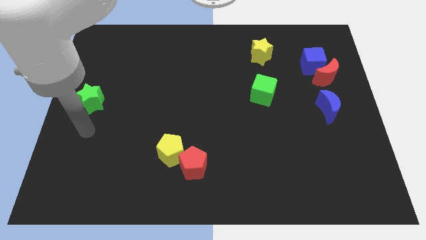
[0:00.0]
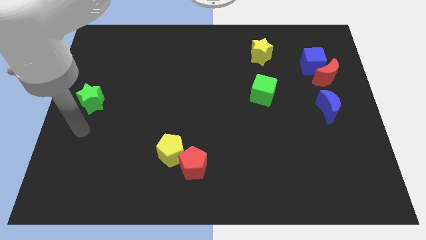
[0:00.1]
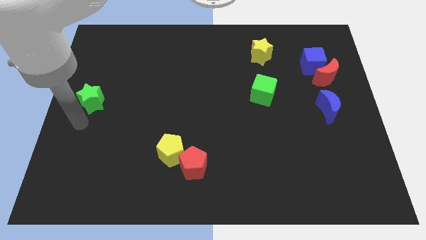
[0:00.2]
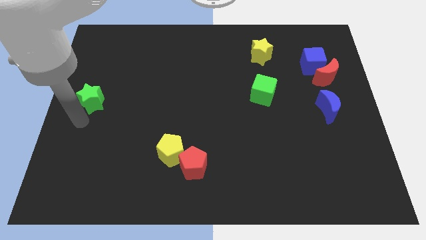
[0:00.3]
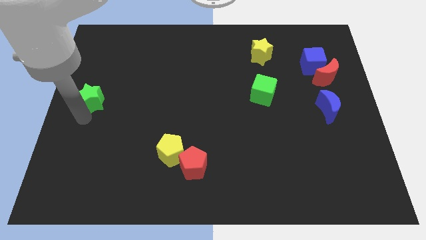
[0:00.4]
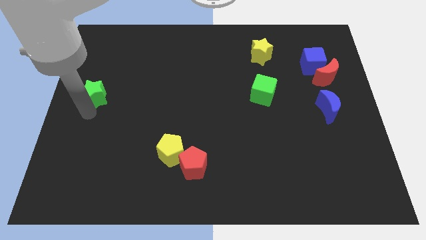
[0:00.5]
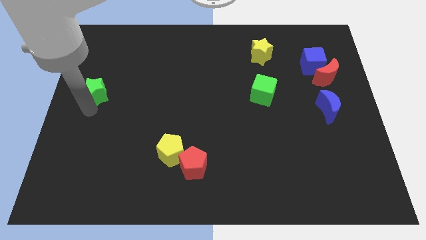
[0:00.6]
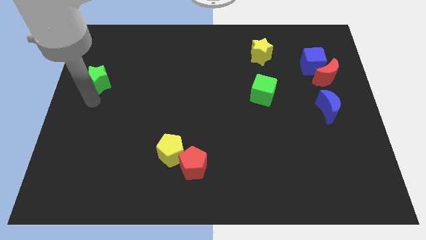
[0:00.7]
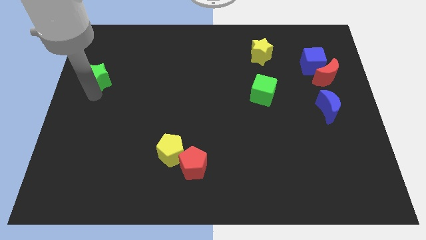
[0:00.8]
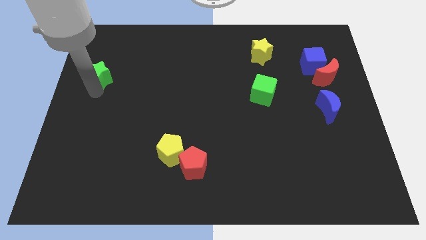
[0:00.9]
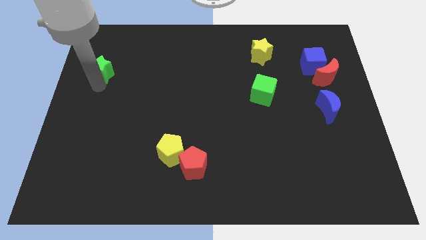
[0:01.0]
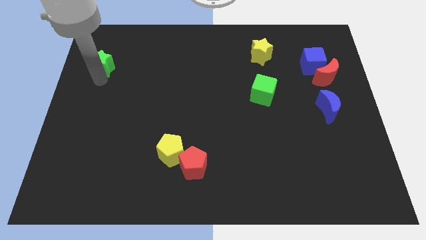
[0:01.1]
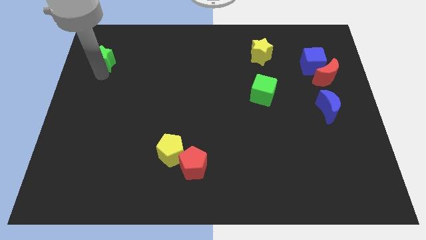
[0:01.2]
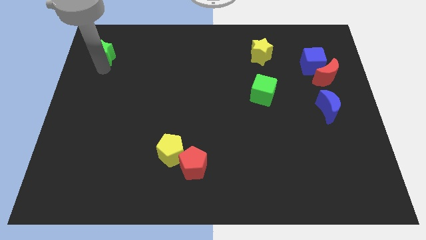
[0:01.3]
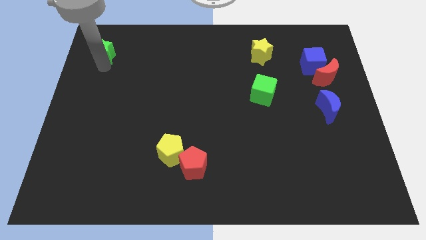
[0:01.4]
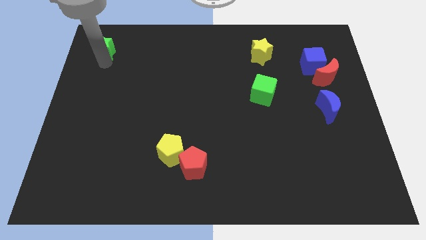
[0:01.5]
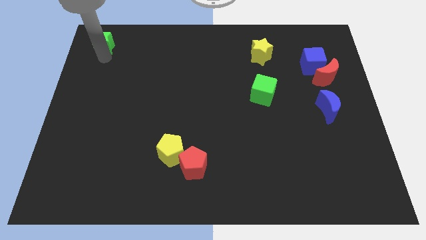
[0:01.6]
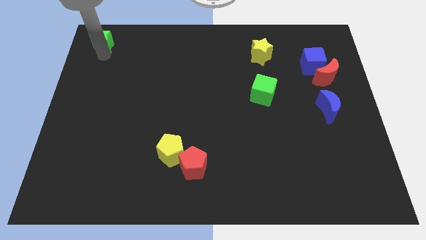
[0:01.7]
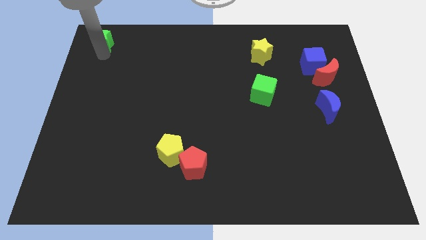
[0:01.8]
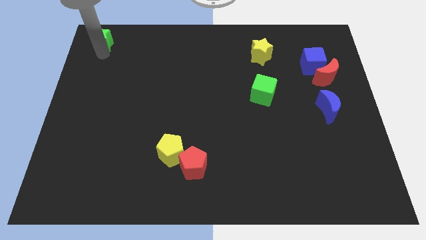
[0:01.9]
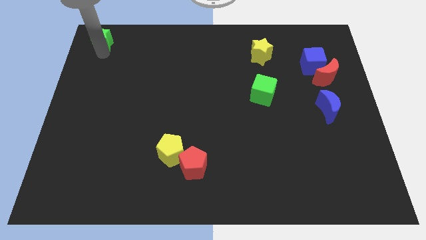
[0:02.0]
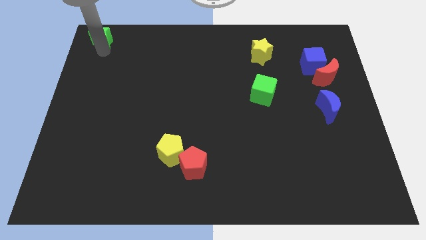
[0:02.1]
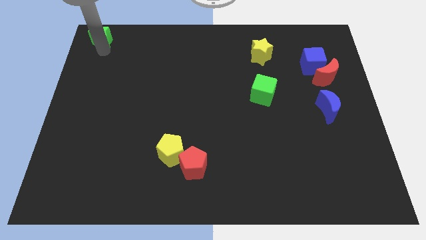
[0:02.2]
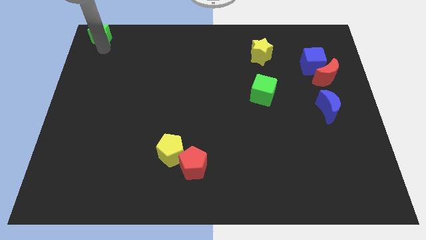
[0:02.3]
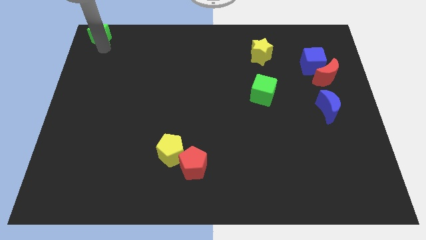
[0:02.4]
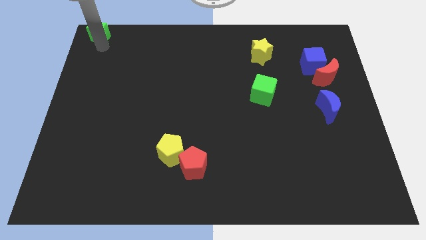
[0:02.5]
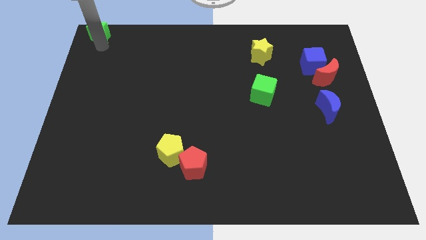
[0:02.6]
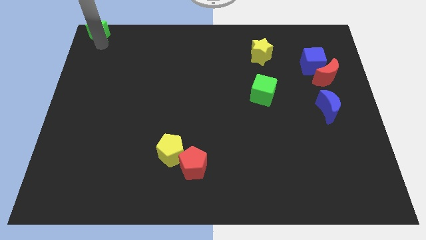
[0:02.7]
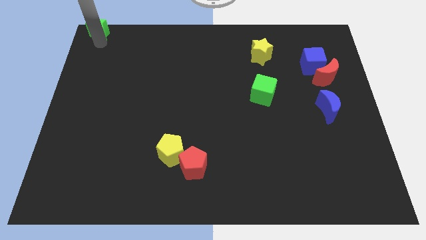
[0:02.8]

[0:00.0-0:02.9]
drag the green star to the top left

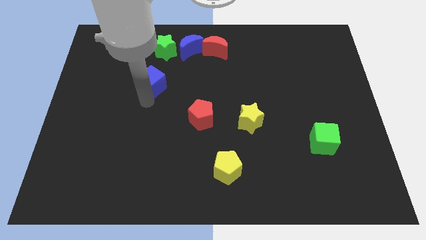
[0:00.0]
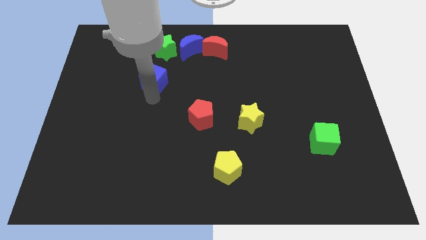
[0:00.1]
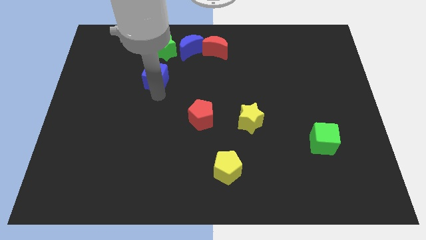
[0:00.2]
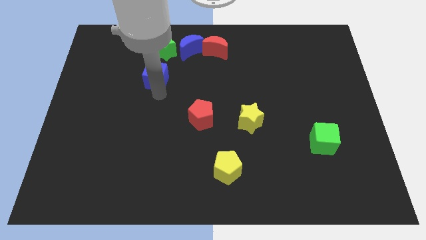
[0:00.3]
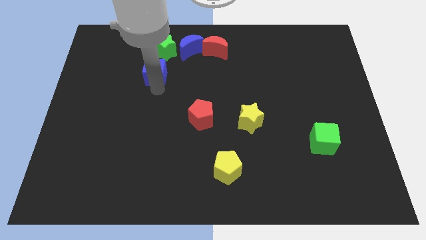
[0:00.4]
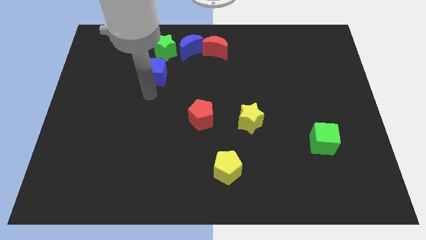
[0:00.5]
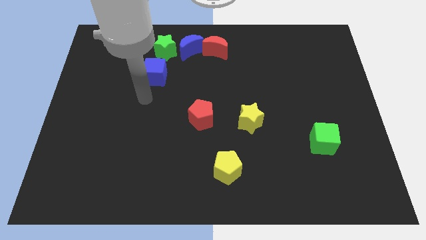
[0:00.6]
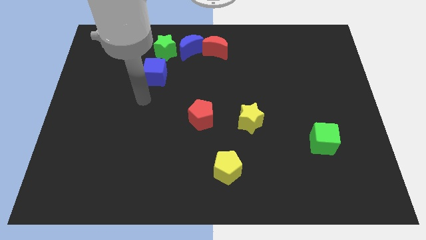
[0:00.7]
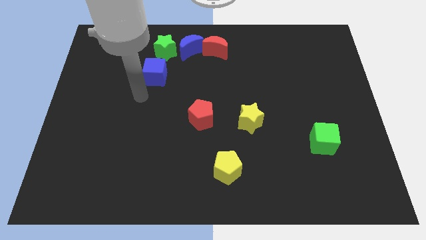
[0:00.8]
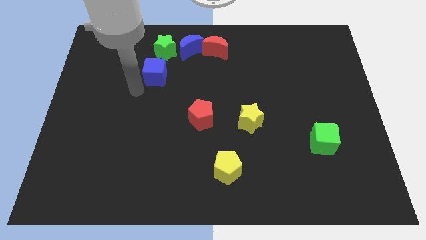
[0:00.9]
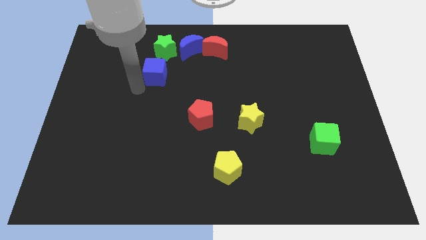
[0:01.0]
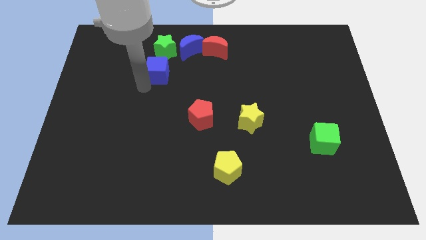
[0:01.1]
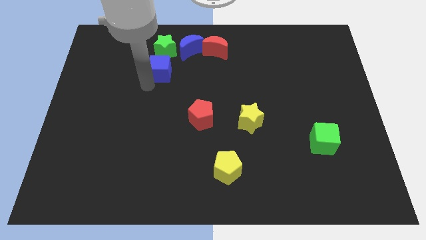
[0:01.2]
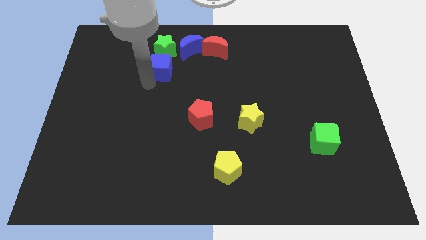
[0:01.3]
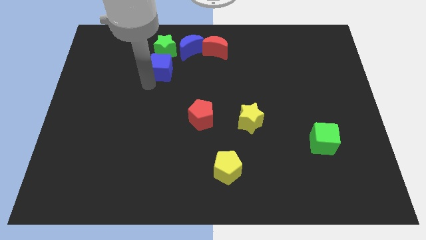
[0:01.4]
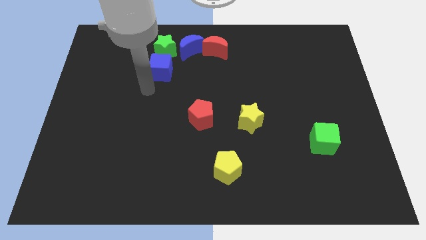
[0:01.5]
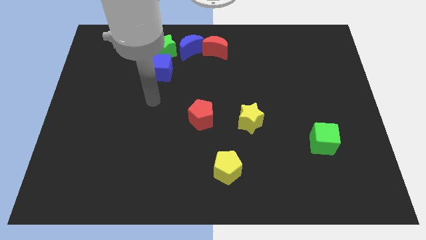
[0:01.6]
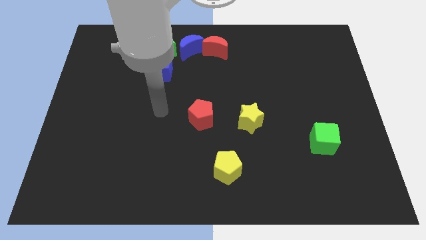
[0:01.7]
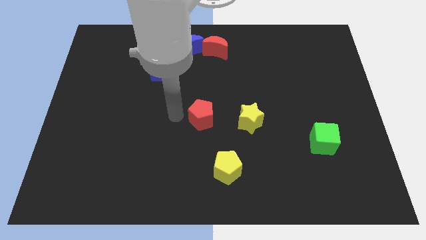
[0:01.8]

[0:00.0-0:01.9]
place the blue cube below the green star

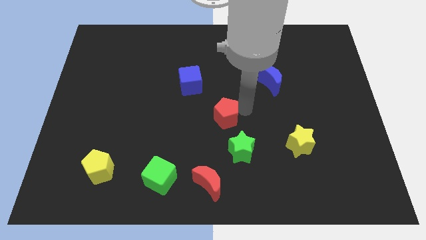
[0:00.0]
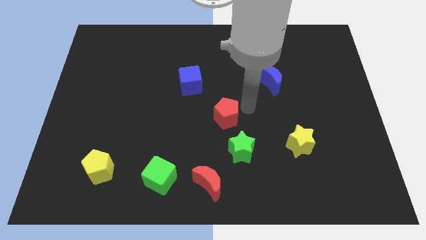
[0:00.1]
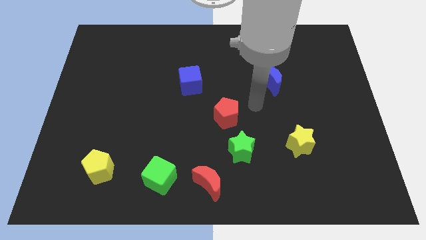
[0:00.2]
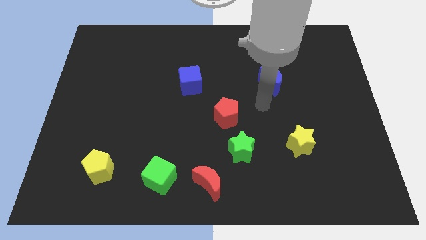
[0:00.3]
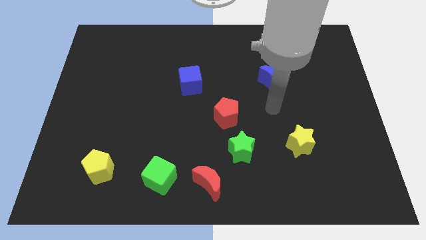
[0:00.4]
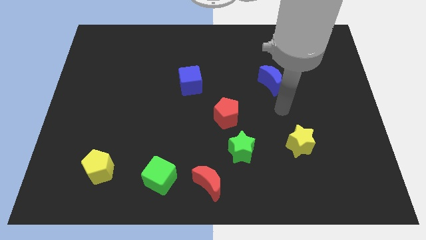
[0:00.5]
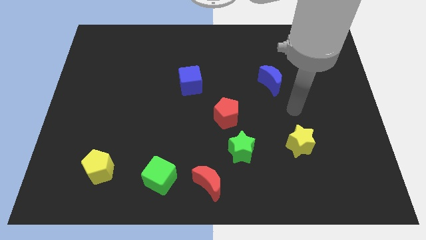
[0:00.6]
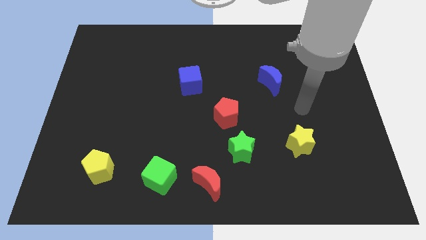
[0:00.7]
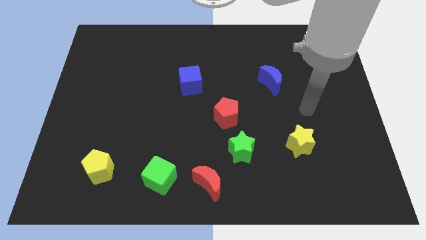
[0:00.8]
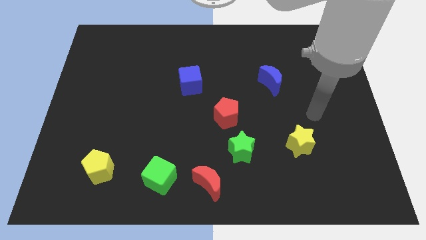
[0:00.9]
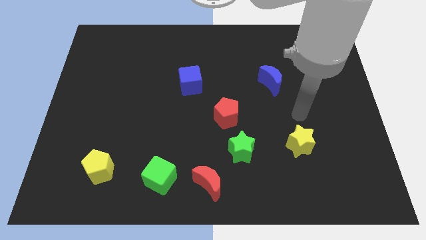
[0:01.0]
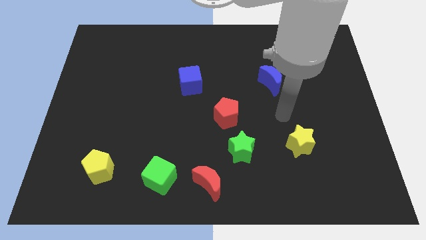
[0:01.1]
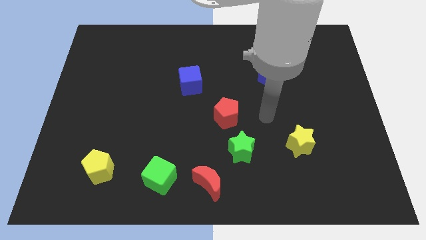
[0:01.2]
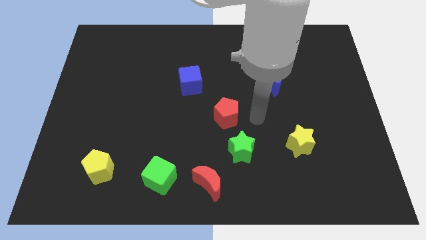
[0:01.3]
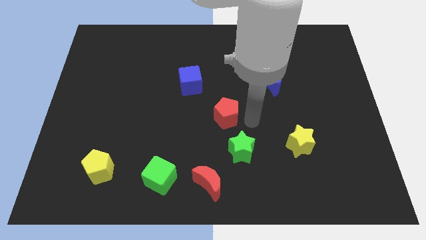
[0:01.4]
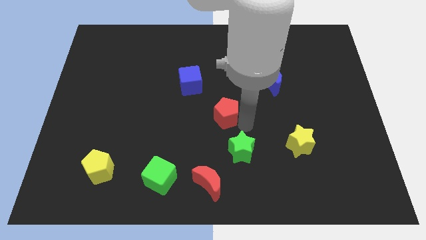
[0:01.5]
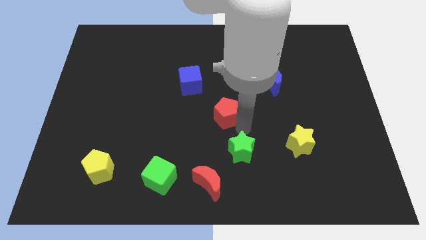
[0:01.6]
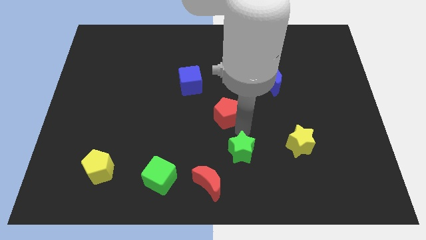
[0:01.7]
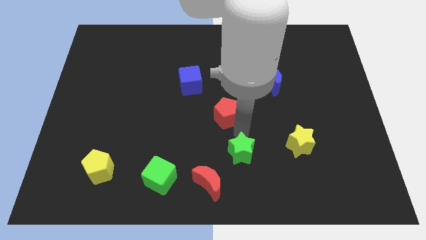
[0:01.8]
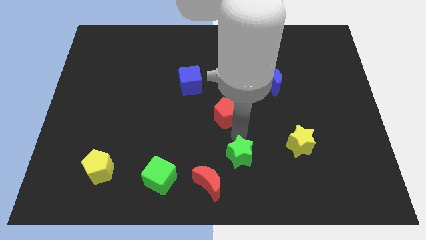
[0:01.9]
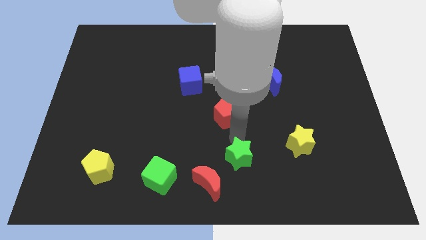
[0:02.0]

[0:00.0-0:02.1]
push the green star towards the bottom center

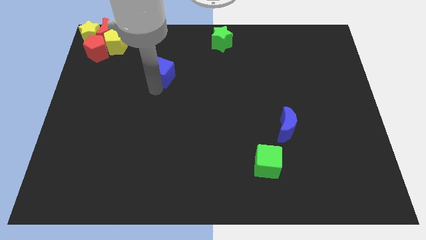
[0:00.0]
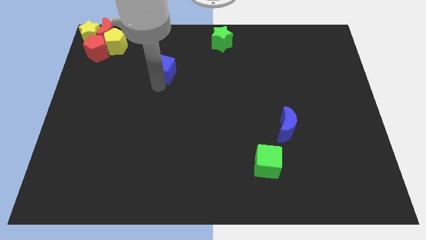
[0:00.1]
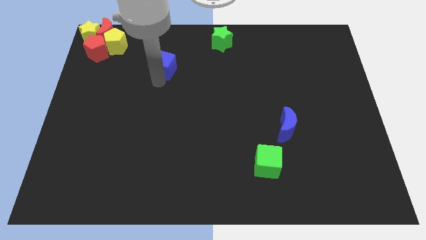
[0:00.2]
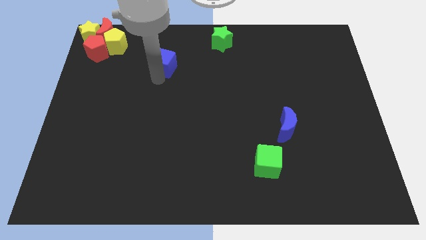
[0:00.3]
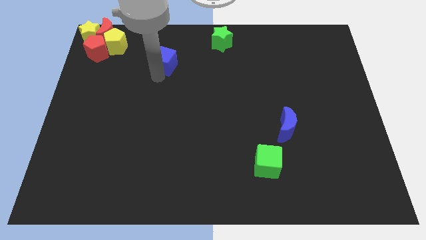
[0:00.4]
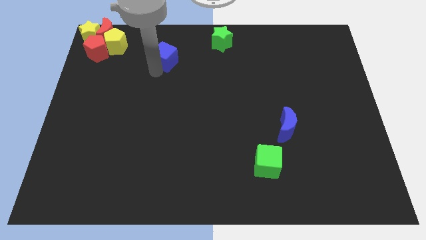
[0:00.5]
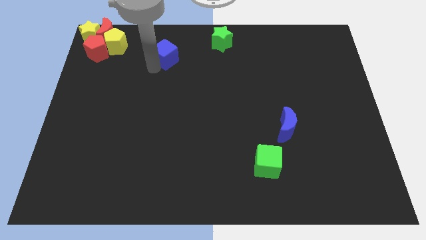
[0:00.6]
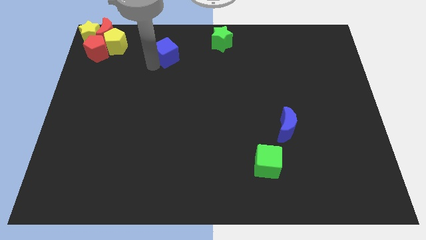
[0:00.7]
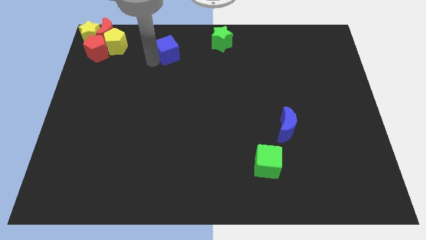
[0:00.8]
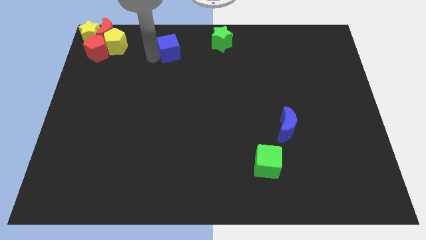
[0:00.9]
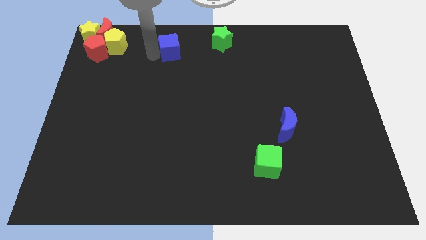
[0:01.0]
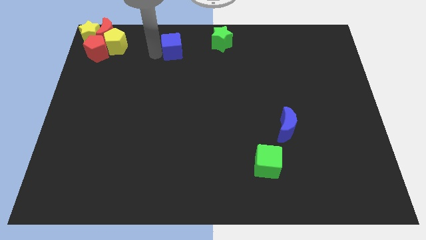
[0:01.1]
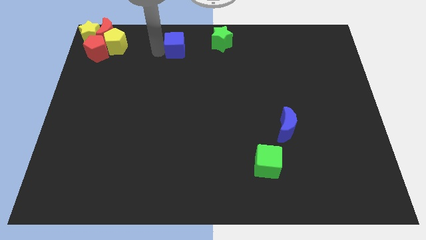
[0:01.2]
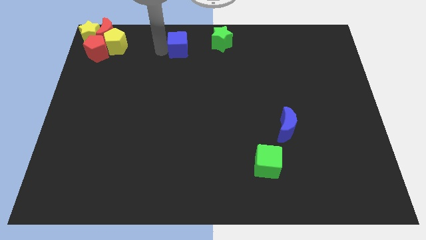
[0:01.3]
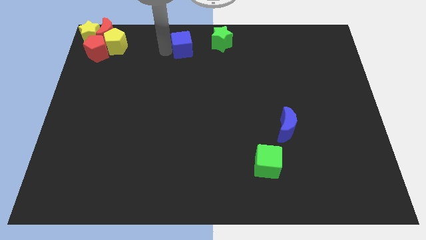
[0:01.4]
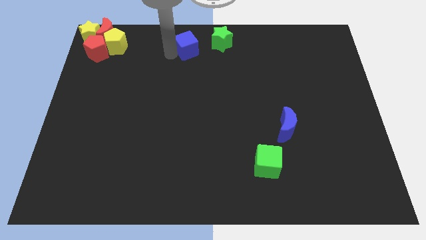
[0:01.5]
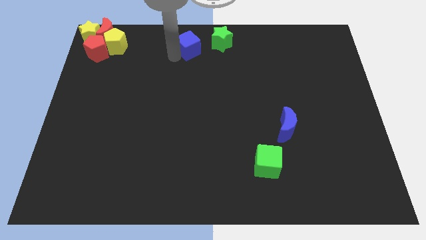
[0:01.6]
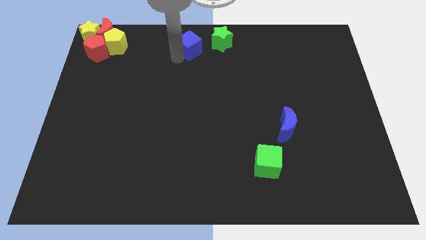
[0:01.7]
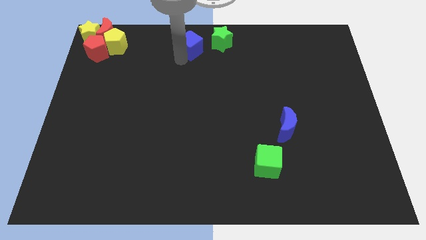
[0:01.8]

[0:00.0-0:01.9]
place blue cube to the left of green star

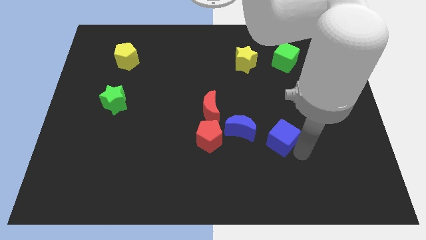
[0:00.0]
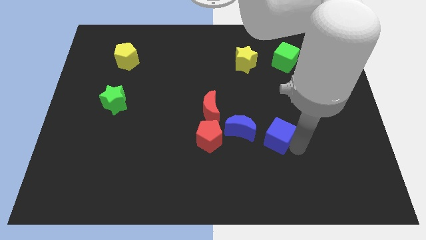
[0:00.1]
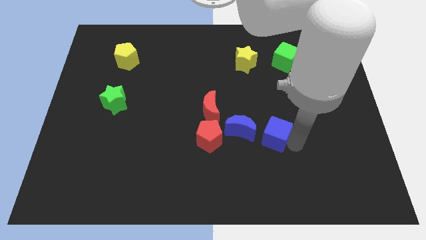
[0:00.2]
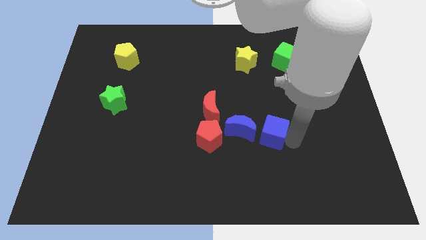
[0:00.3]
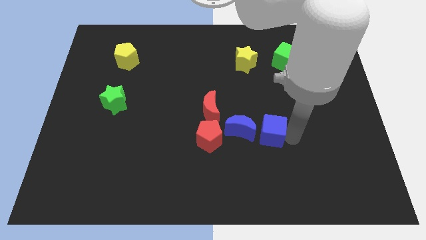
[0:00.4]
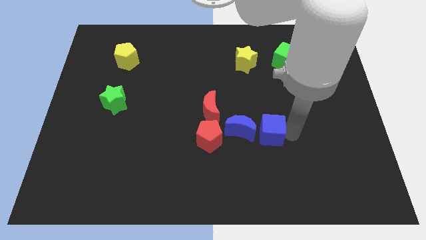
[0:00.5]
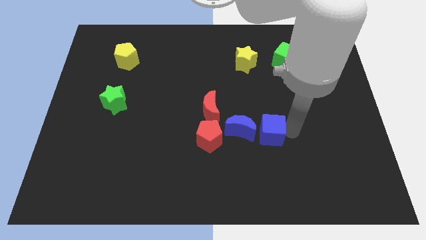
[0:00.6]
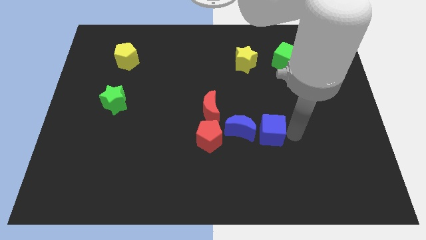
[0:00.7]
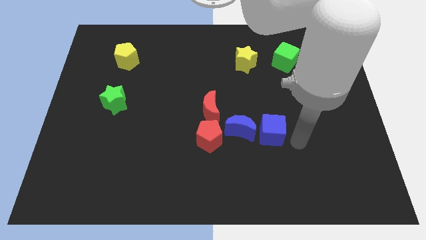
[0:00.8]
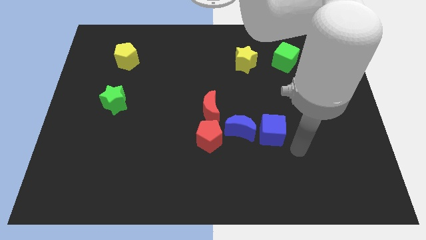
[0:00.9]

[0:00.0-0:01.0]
move blue cube towards blue moon
